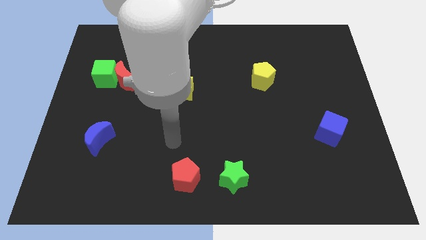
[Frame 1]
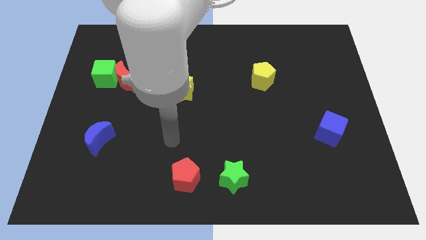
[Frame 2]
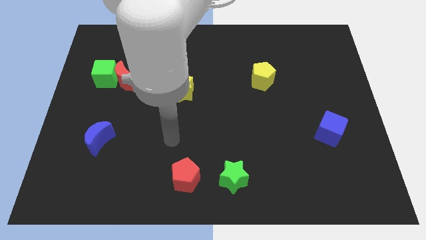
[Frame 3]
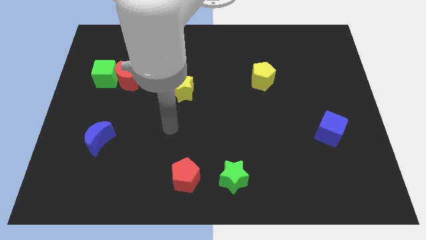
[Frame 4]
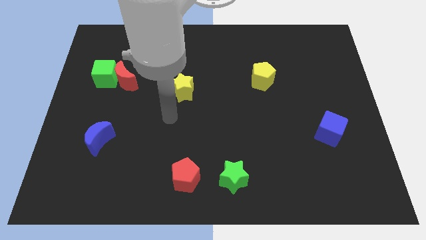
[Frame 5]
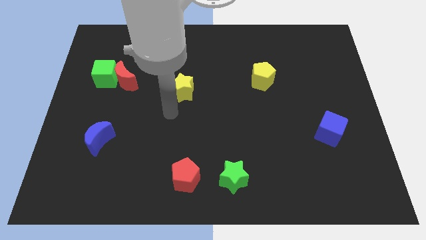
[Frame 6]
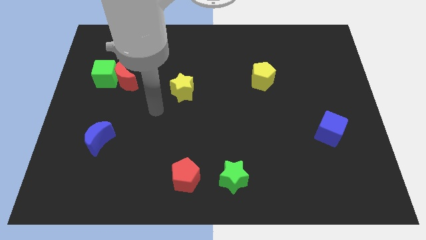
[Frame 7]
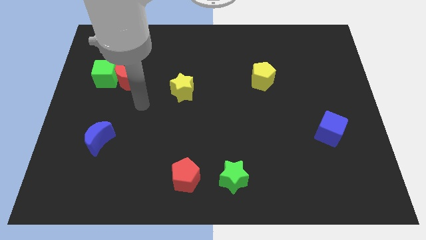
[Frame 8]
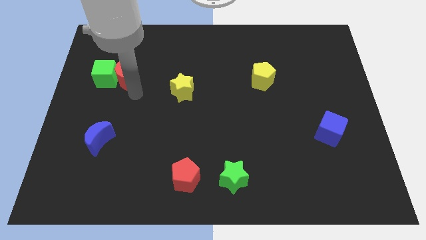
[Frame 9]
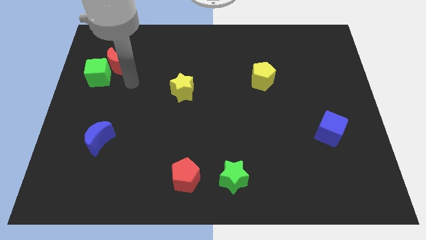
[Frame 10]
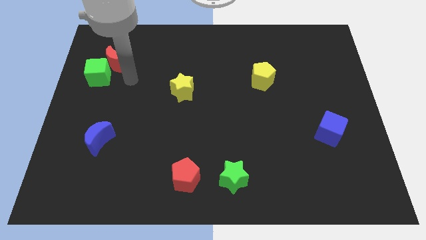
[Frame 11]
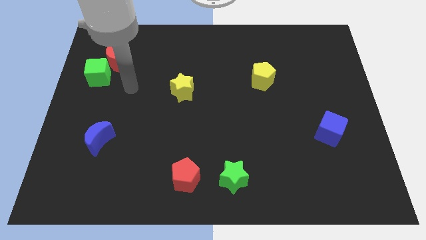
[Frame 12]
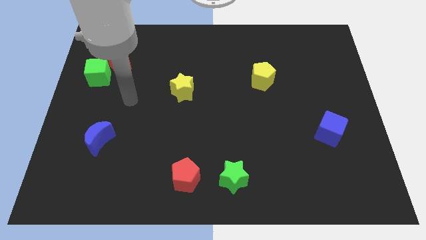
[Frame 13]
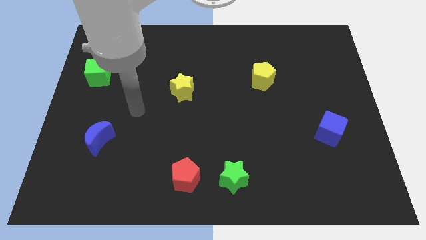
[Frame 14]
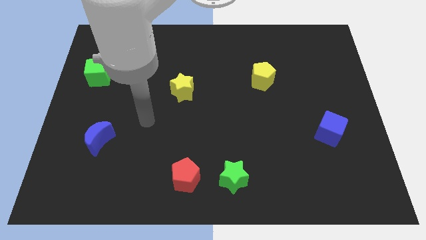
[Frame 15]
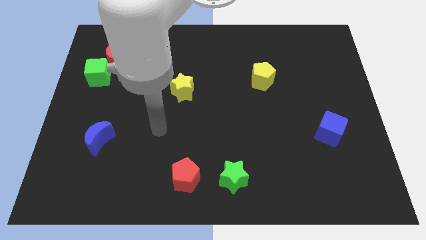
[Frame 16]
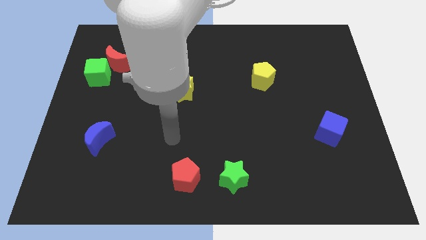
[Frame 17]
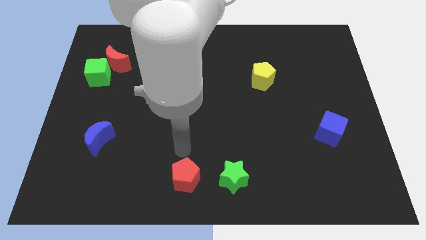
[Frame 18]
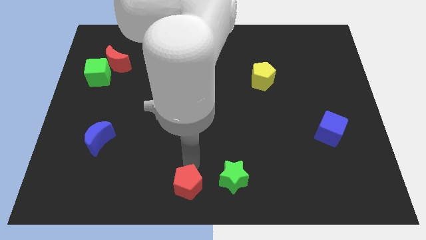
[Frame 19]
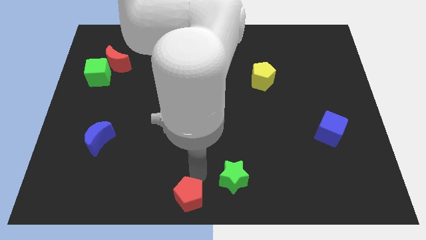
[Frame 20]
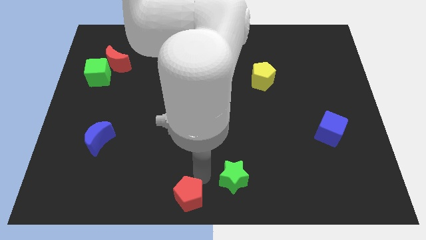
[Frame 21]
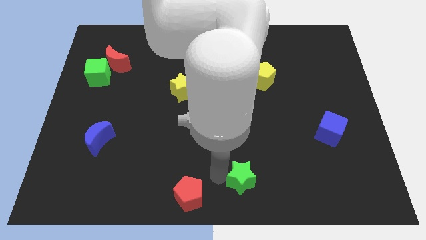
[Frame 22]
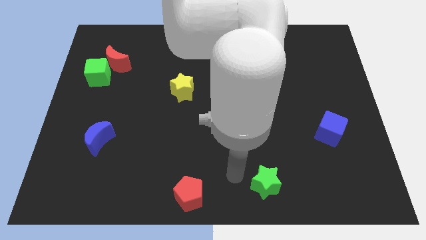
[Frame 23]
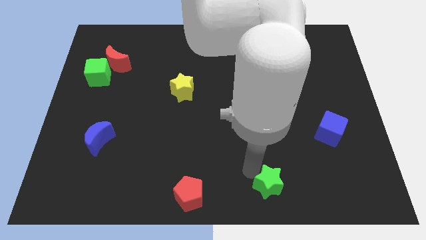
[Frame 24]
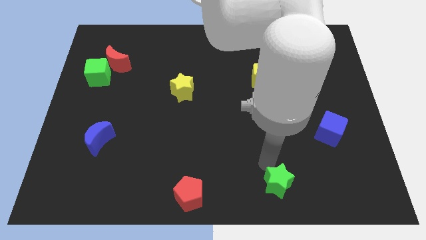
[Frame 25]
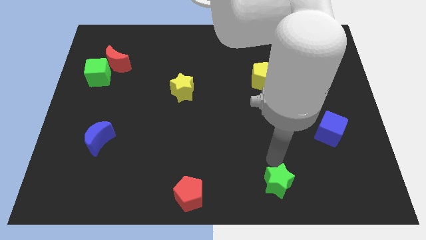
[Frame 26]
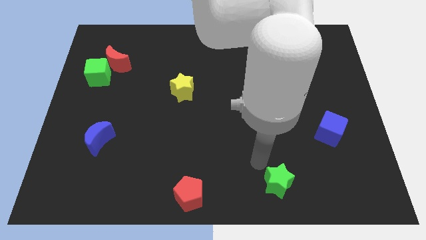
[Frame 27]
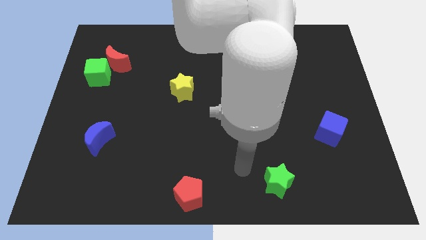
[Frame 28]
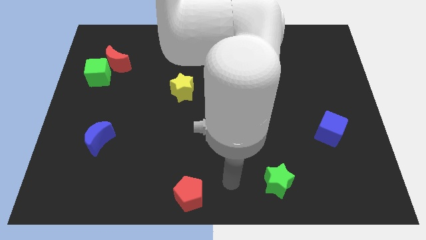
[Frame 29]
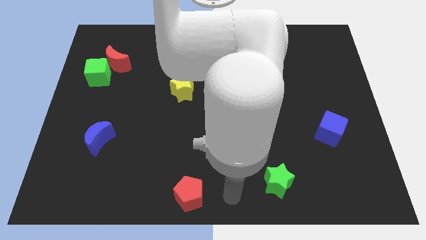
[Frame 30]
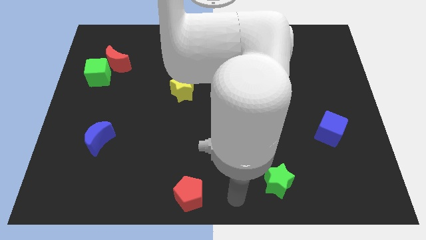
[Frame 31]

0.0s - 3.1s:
move the red blocks and green star

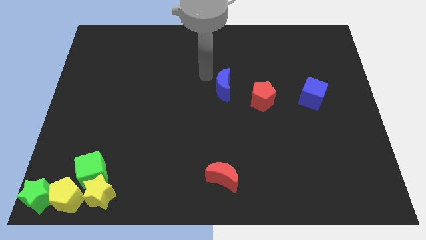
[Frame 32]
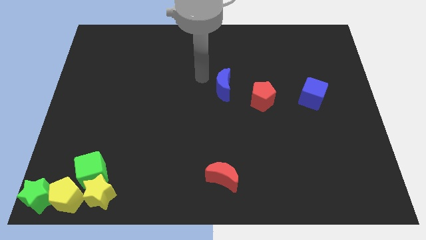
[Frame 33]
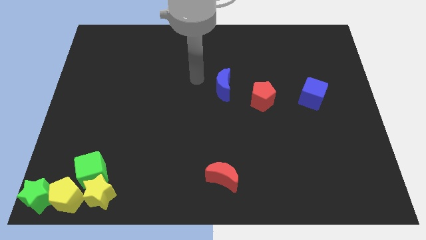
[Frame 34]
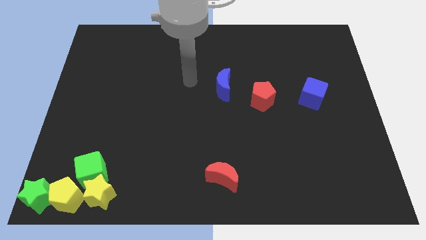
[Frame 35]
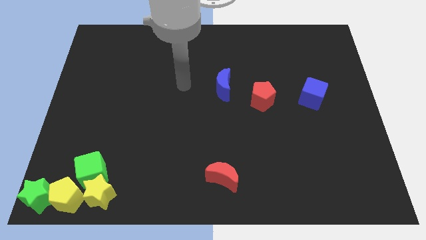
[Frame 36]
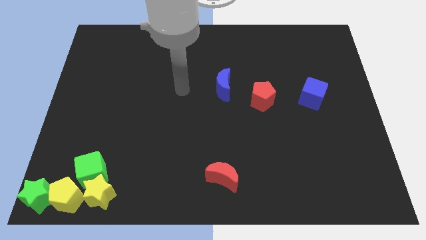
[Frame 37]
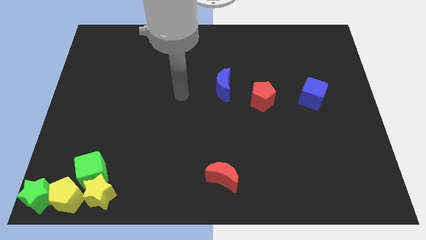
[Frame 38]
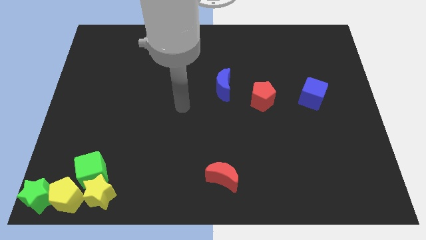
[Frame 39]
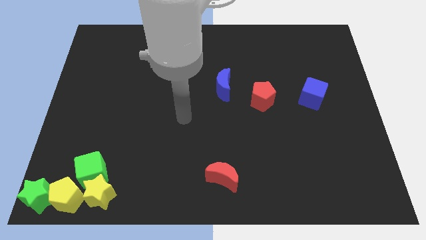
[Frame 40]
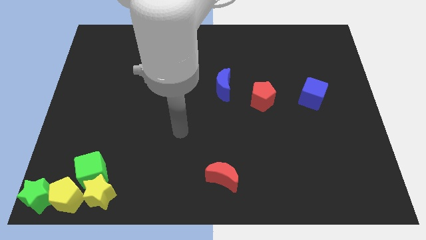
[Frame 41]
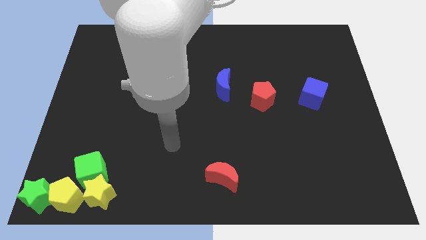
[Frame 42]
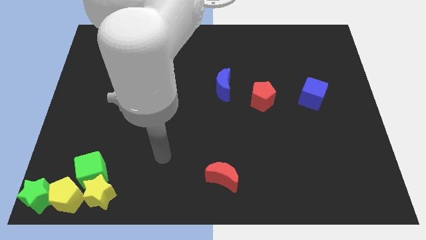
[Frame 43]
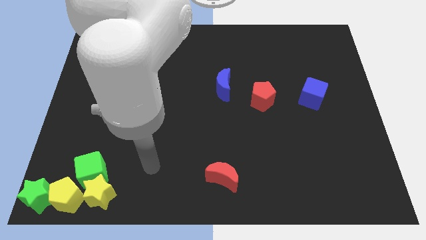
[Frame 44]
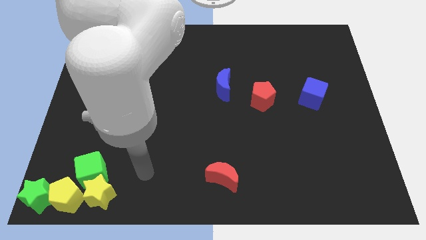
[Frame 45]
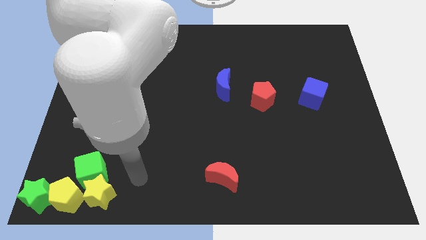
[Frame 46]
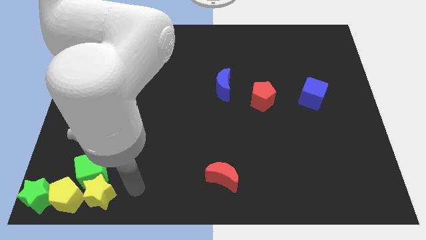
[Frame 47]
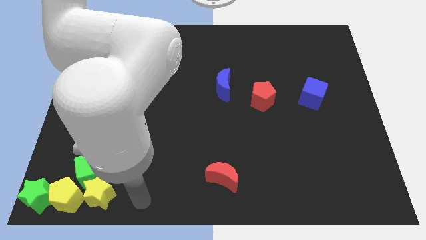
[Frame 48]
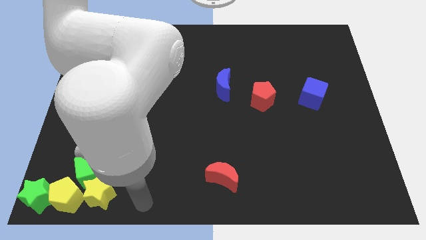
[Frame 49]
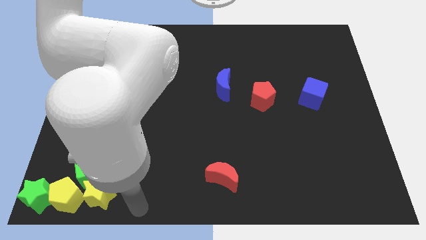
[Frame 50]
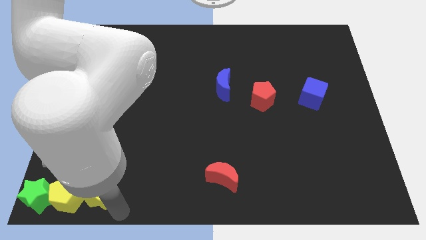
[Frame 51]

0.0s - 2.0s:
place your arm closer to the yellow star

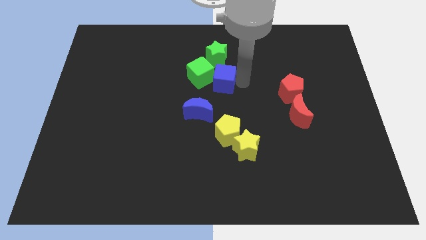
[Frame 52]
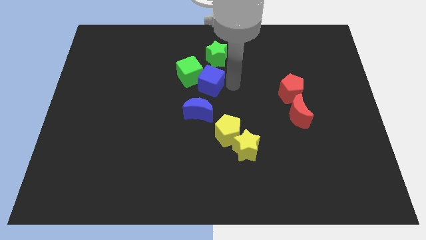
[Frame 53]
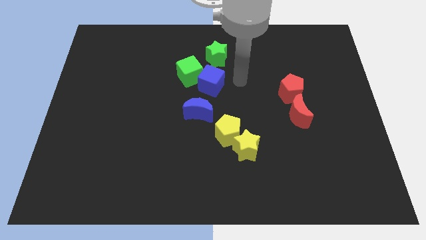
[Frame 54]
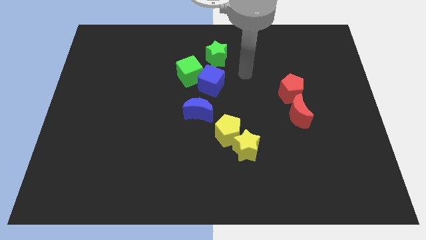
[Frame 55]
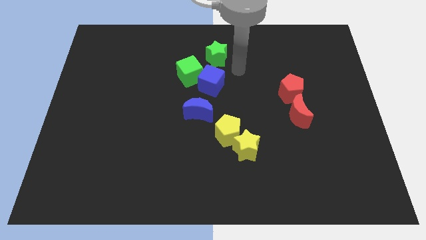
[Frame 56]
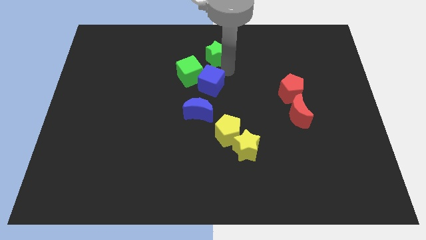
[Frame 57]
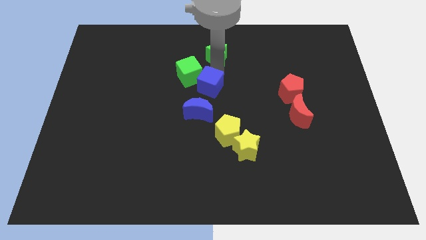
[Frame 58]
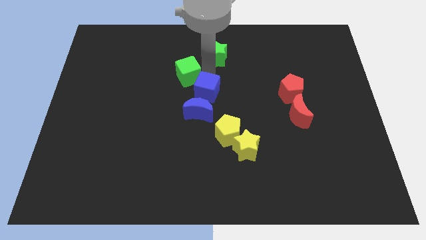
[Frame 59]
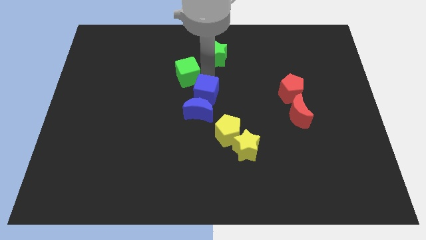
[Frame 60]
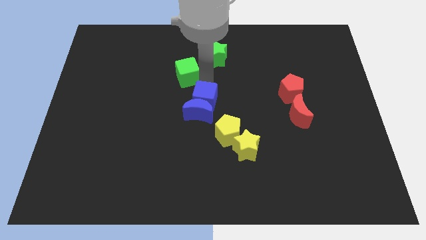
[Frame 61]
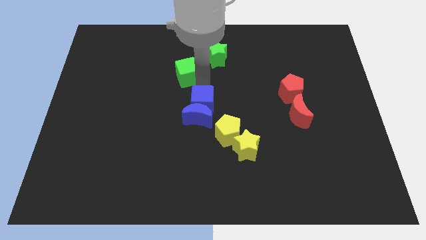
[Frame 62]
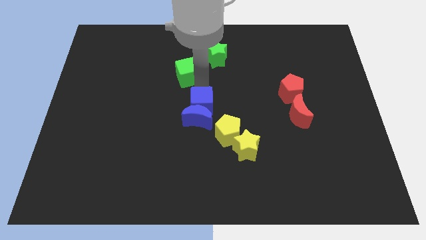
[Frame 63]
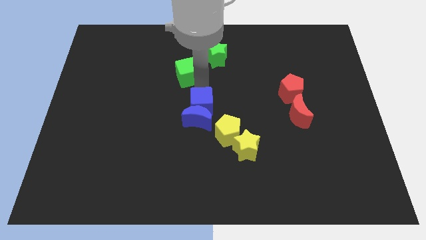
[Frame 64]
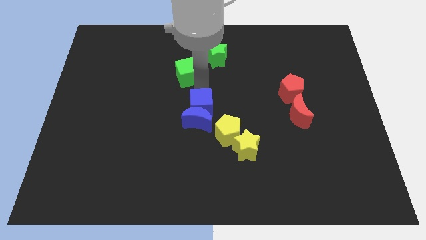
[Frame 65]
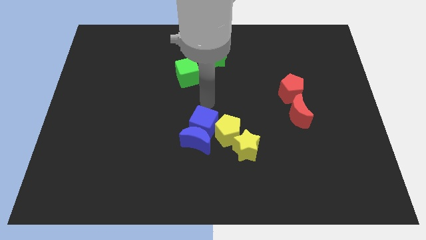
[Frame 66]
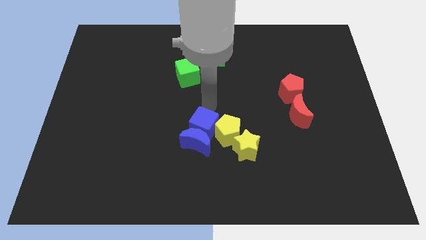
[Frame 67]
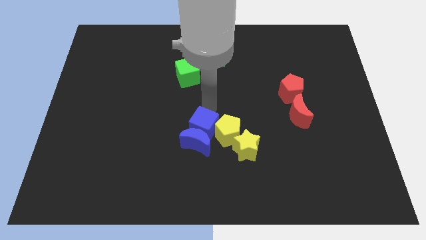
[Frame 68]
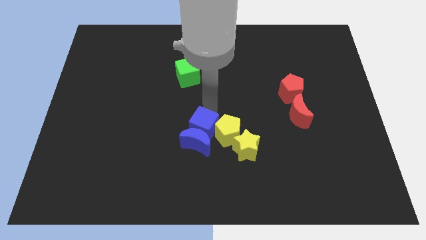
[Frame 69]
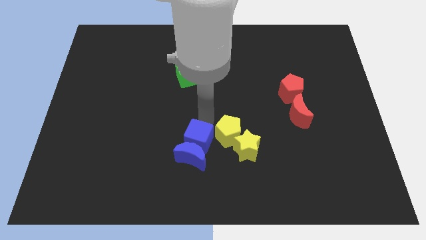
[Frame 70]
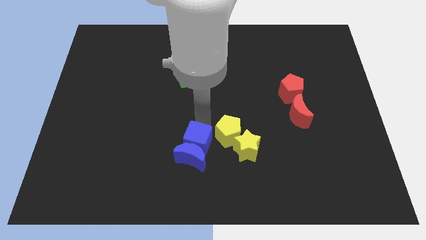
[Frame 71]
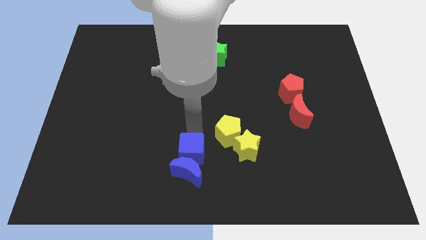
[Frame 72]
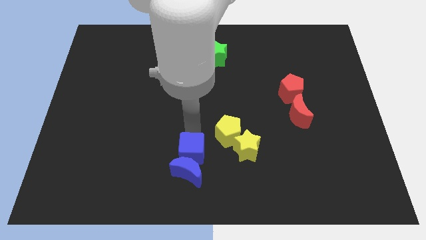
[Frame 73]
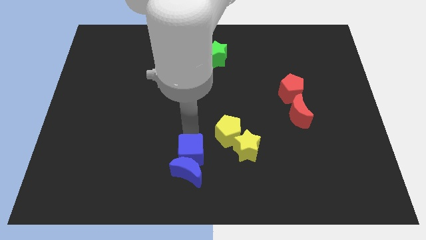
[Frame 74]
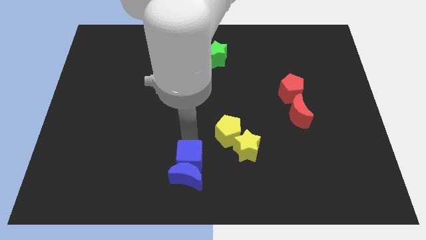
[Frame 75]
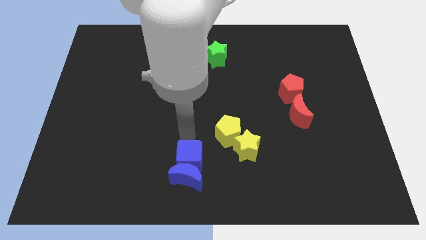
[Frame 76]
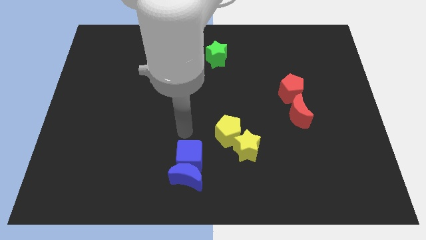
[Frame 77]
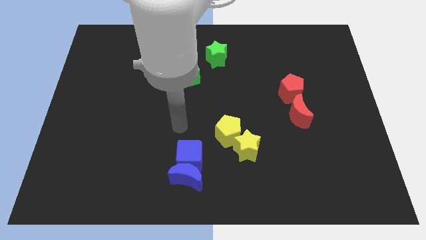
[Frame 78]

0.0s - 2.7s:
move the blue cube above the blue crescent

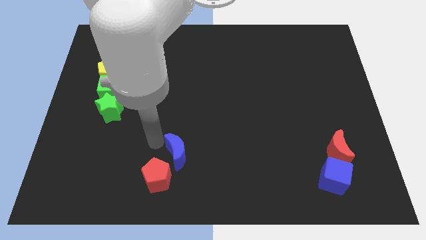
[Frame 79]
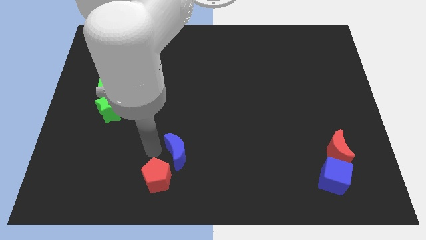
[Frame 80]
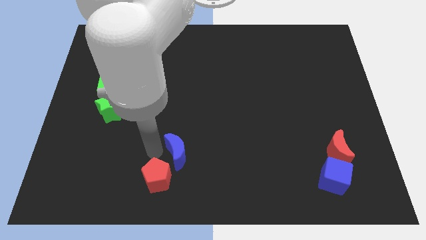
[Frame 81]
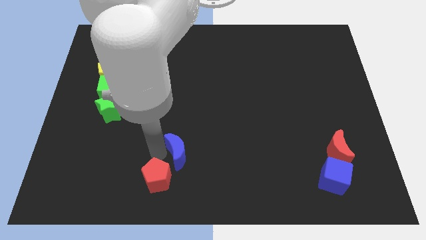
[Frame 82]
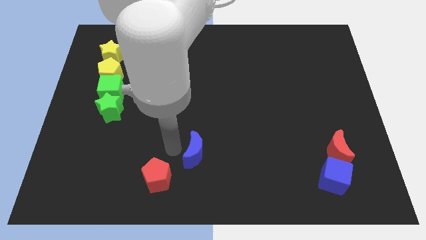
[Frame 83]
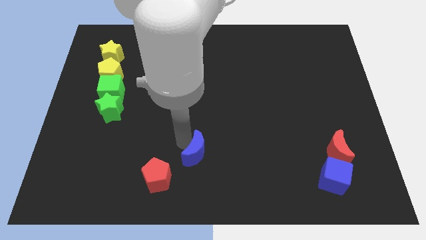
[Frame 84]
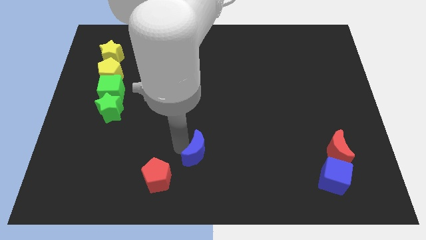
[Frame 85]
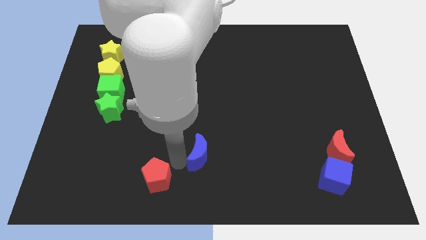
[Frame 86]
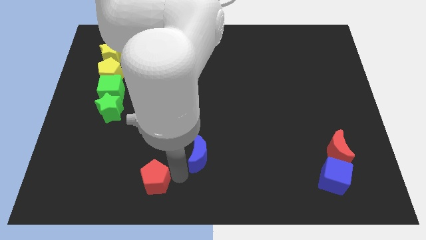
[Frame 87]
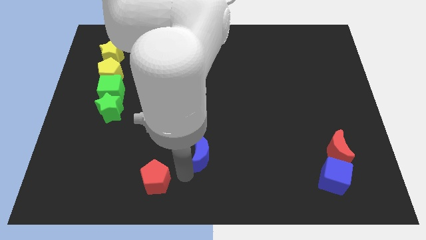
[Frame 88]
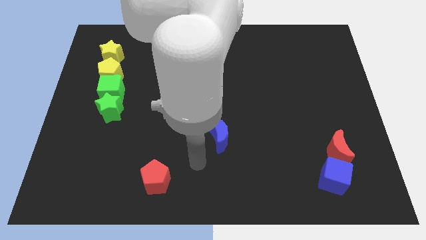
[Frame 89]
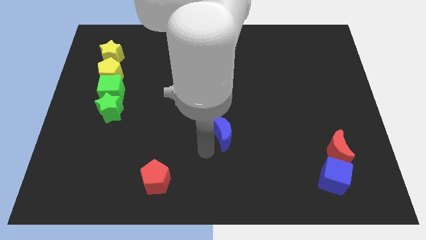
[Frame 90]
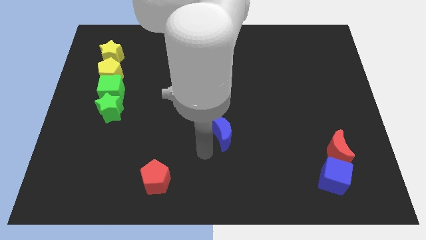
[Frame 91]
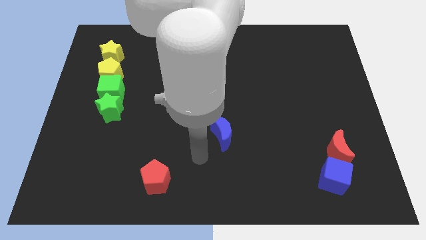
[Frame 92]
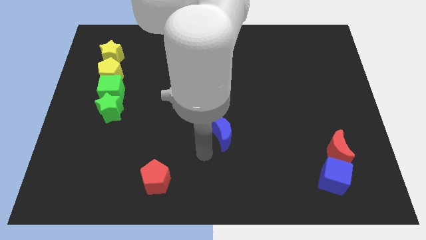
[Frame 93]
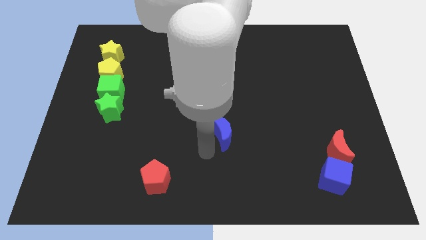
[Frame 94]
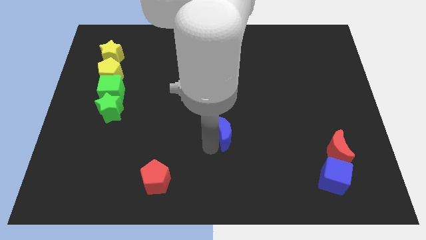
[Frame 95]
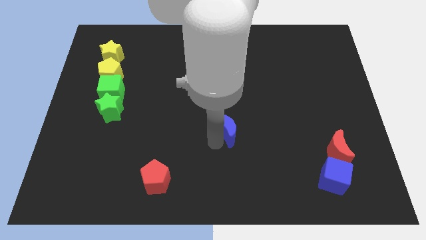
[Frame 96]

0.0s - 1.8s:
separate the blue crescent from the red pentagon
